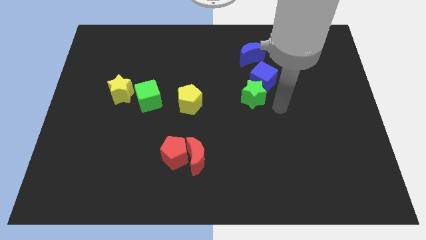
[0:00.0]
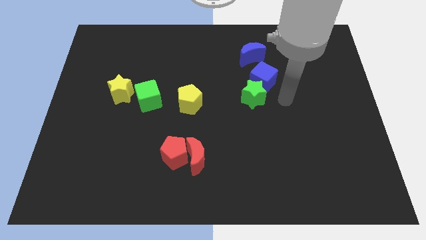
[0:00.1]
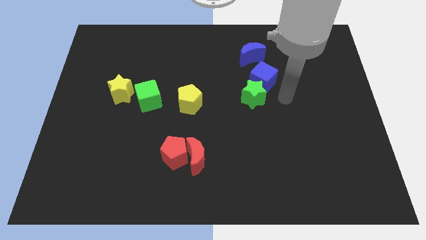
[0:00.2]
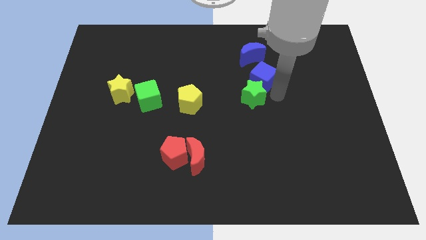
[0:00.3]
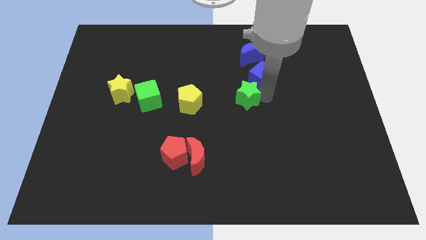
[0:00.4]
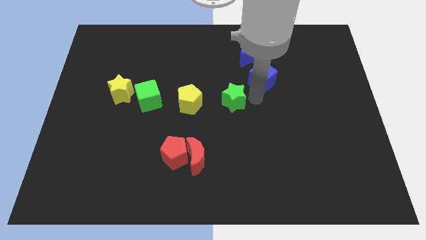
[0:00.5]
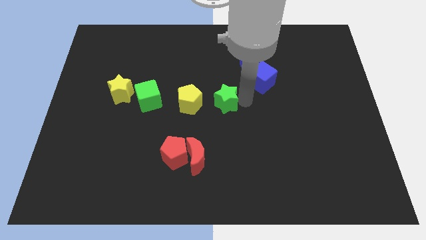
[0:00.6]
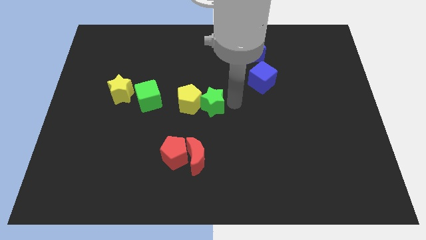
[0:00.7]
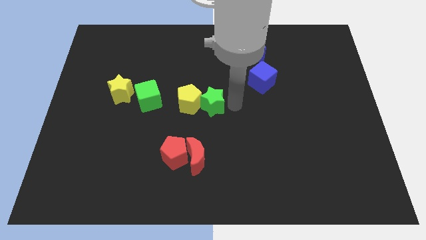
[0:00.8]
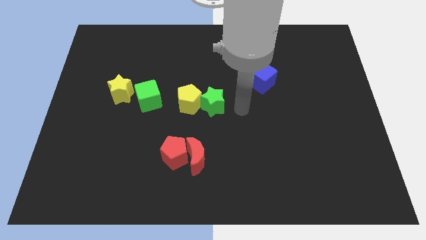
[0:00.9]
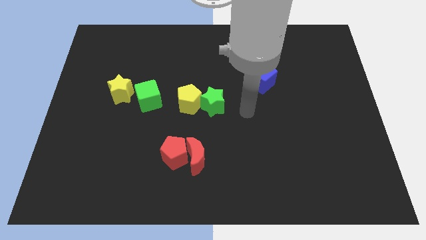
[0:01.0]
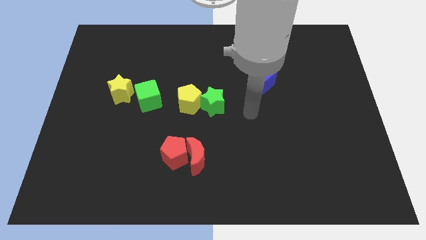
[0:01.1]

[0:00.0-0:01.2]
push the green star into the yellow pentagon

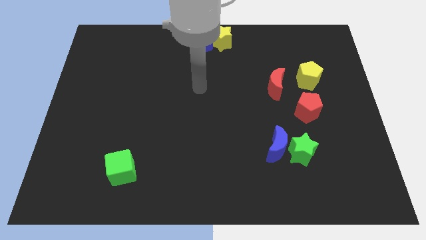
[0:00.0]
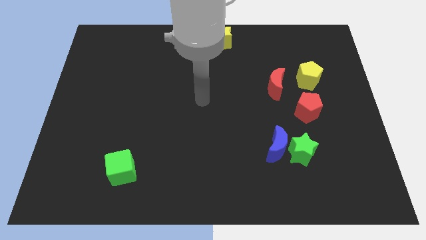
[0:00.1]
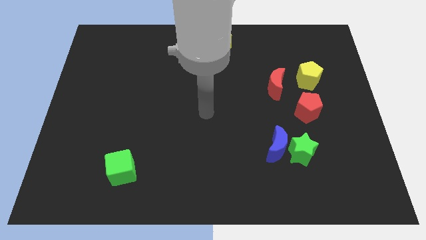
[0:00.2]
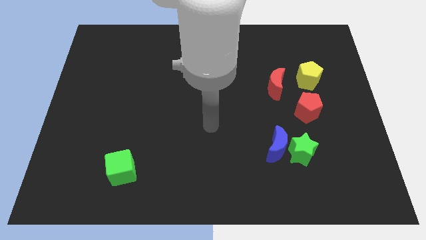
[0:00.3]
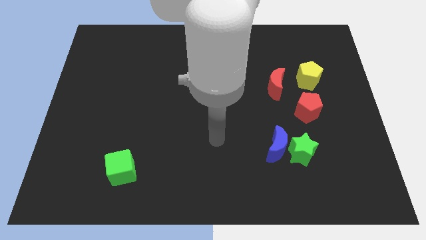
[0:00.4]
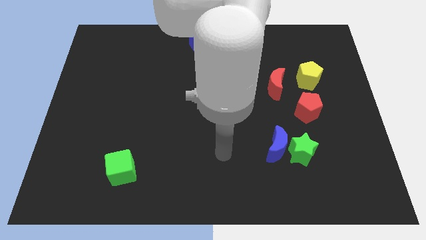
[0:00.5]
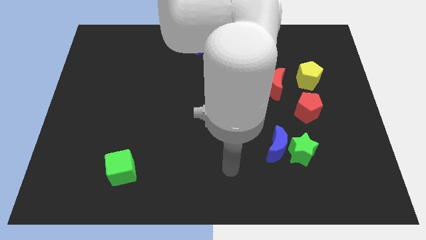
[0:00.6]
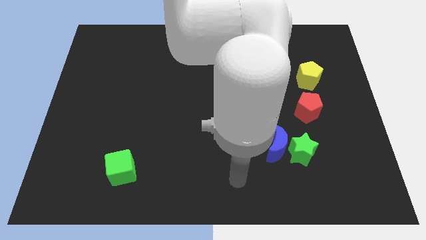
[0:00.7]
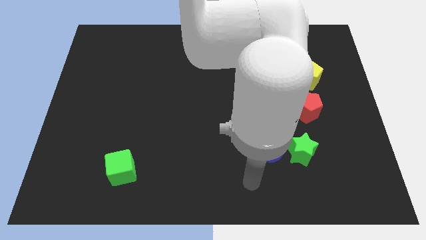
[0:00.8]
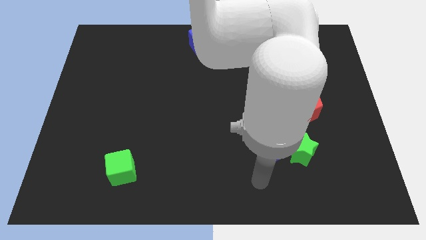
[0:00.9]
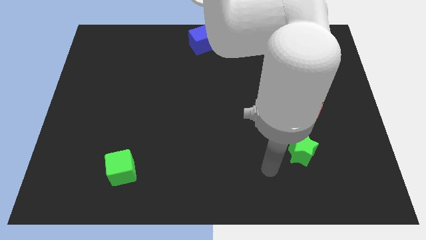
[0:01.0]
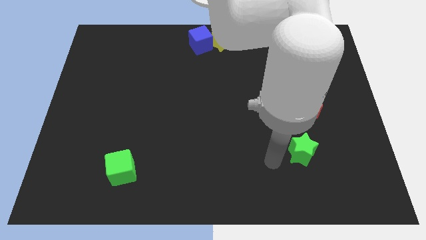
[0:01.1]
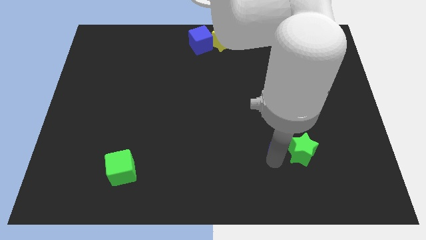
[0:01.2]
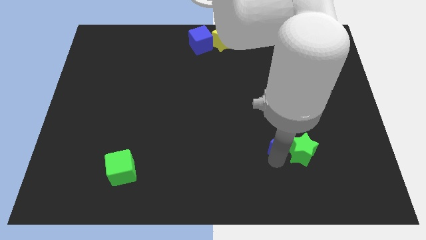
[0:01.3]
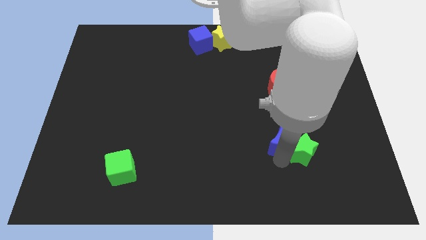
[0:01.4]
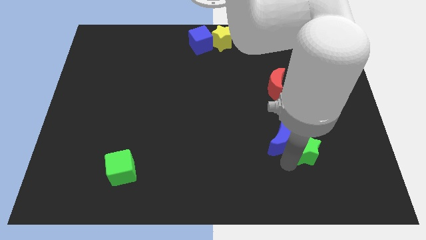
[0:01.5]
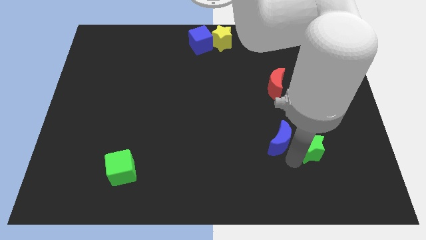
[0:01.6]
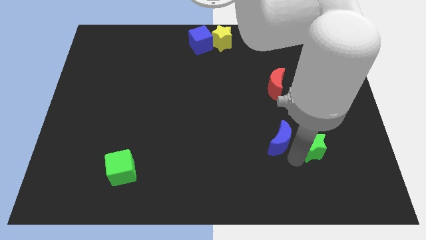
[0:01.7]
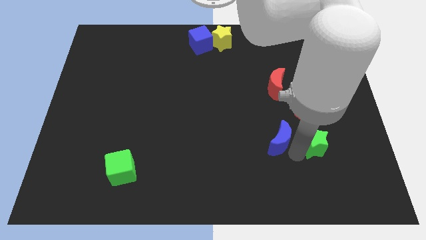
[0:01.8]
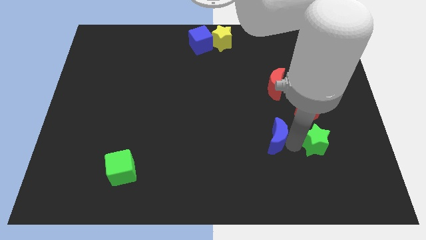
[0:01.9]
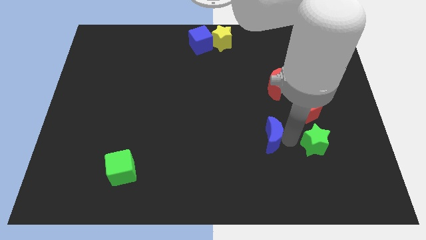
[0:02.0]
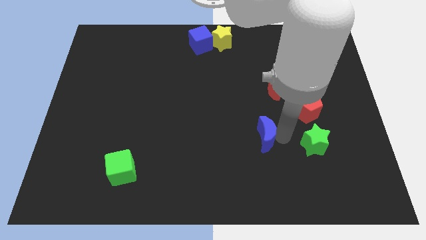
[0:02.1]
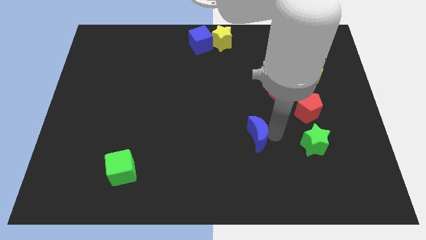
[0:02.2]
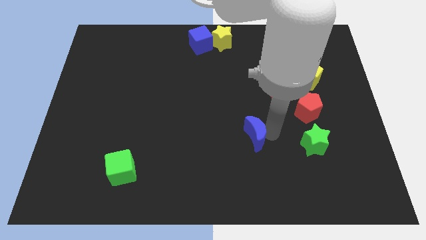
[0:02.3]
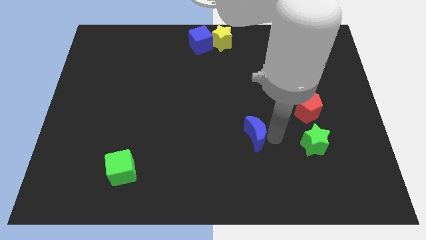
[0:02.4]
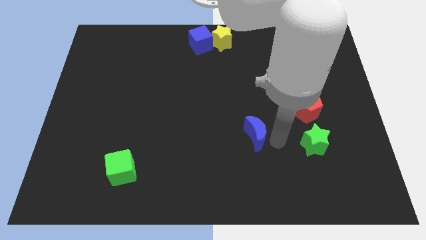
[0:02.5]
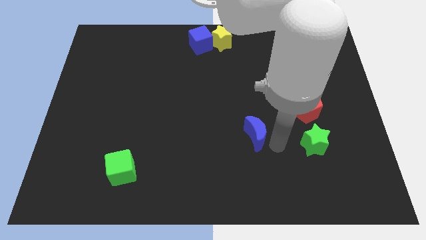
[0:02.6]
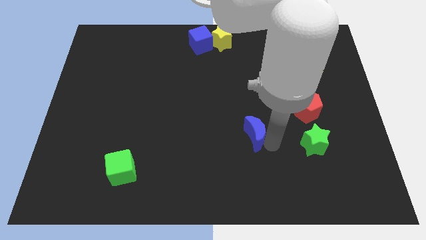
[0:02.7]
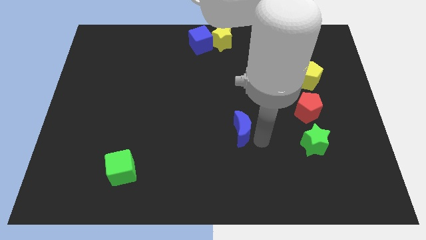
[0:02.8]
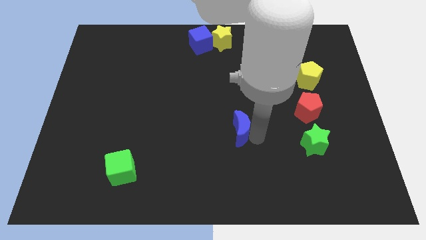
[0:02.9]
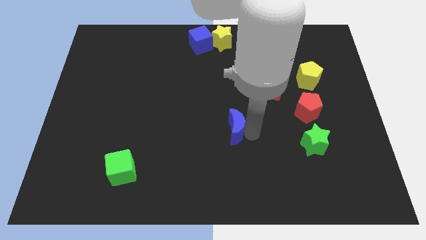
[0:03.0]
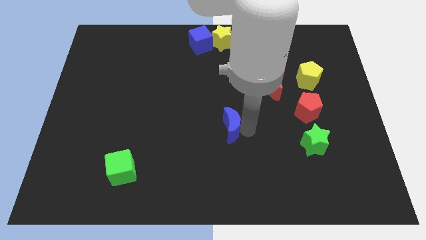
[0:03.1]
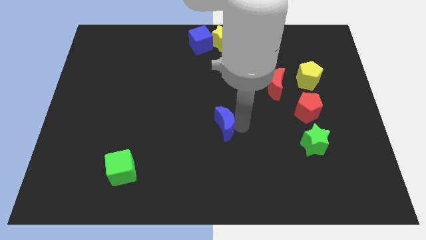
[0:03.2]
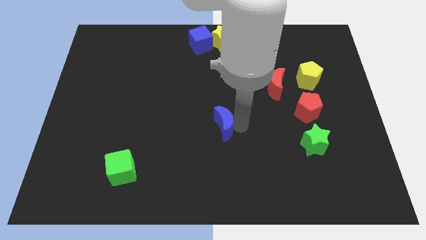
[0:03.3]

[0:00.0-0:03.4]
put the blue crescent vertically at the bottom side of the yellow star

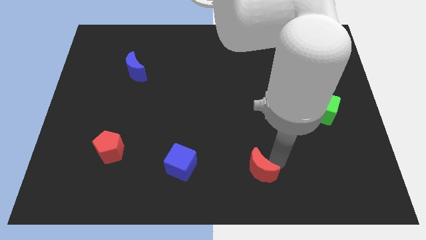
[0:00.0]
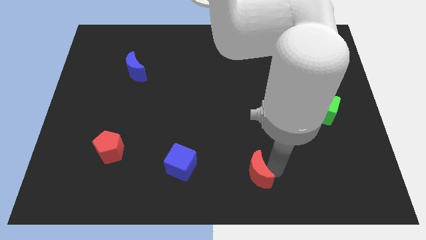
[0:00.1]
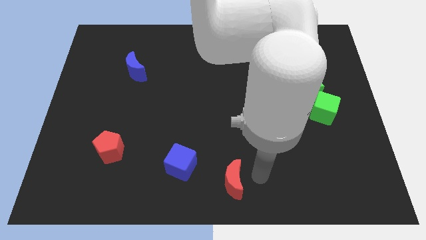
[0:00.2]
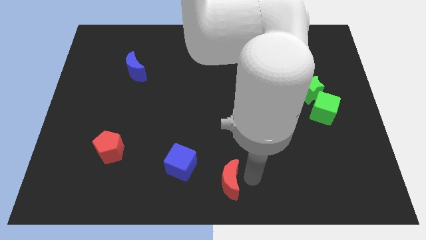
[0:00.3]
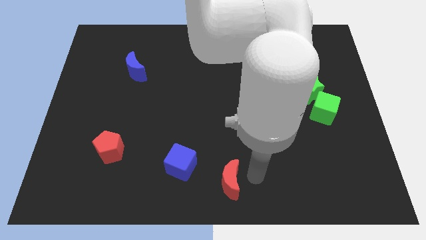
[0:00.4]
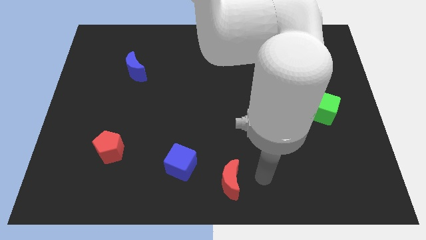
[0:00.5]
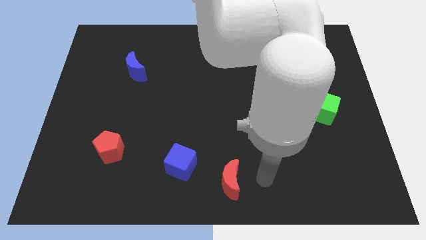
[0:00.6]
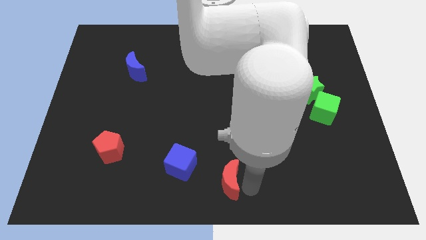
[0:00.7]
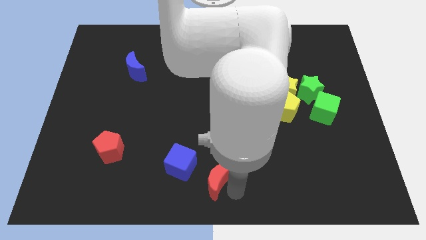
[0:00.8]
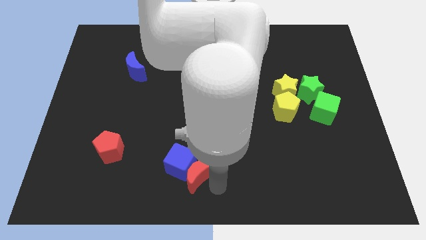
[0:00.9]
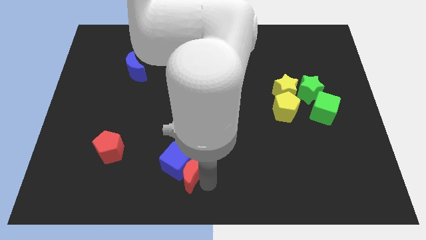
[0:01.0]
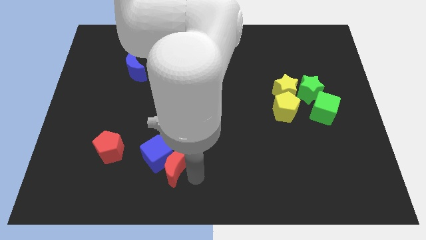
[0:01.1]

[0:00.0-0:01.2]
push the red crescent into the blue cube

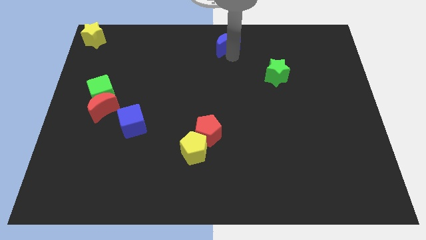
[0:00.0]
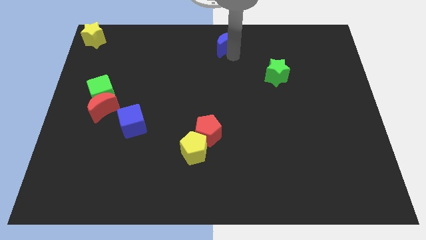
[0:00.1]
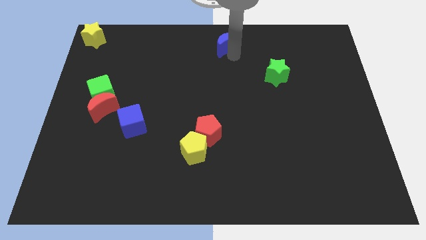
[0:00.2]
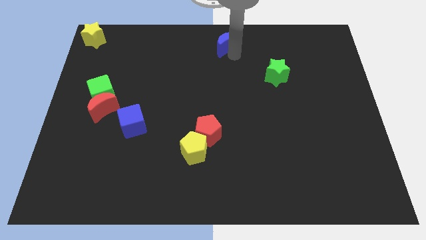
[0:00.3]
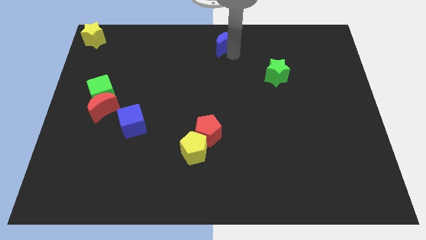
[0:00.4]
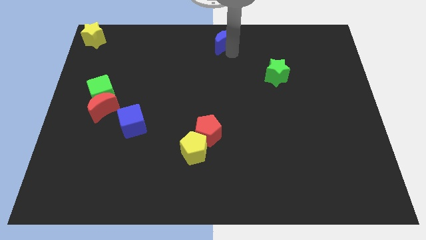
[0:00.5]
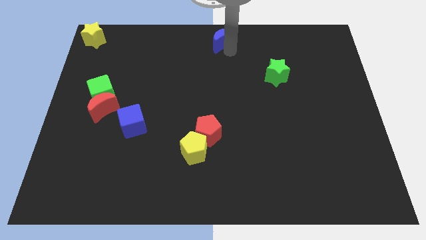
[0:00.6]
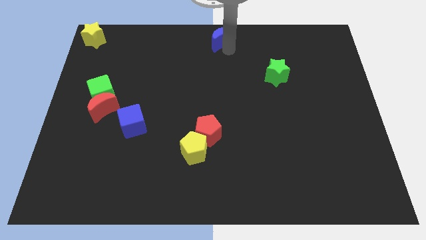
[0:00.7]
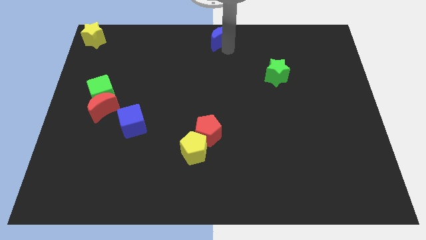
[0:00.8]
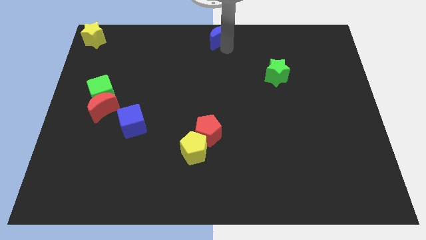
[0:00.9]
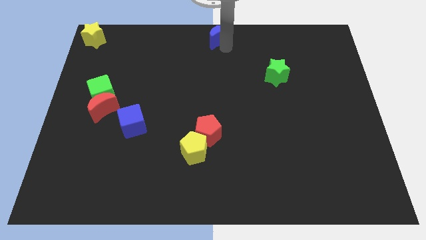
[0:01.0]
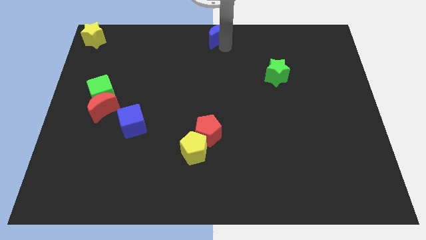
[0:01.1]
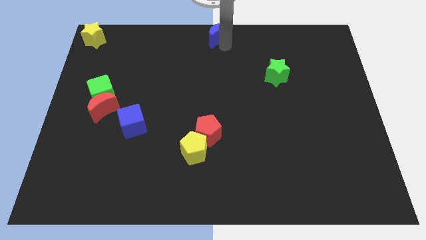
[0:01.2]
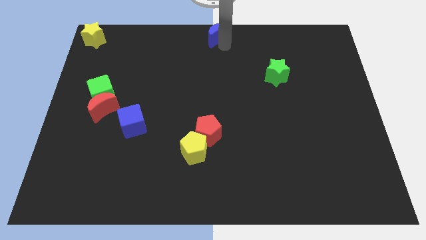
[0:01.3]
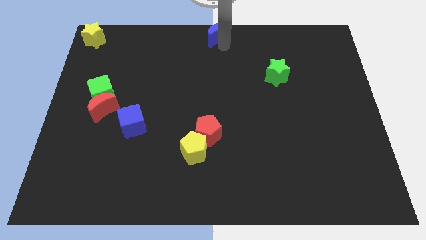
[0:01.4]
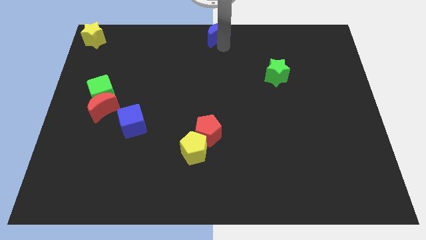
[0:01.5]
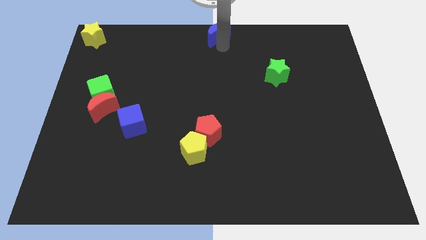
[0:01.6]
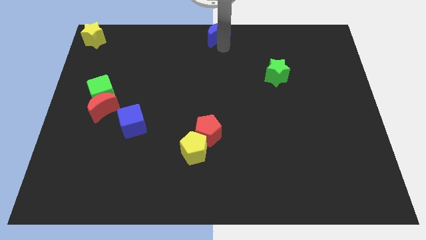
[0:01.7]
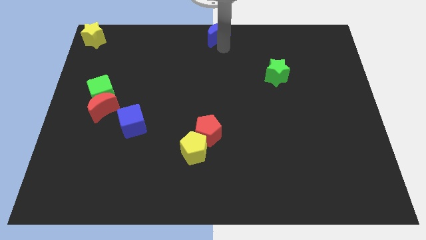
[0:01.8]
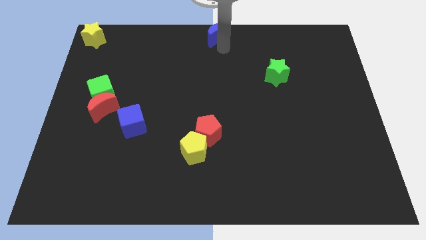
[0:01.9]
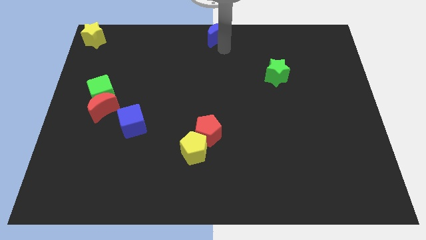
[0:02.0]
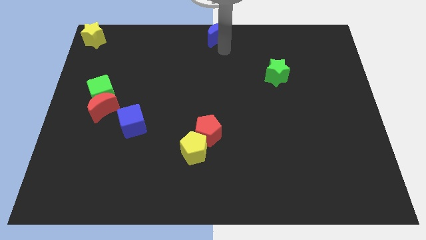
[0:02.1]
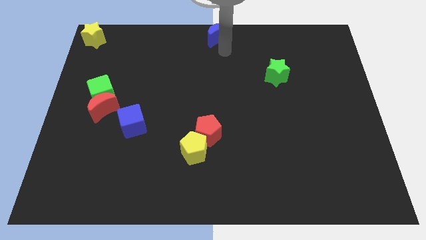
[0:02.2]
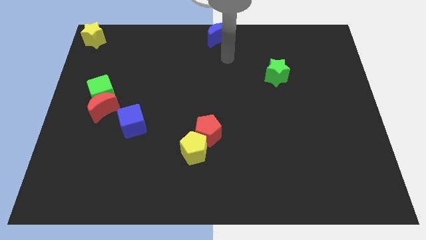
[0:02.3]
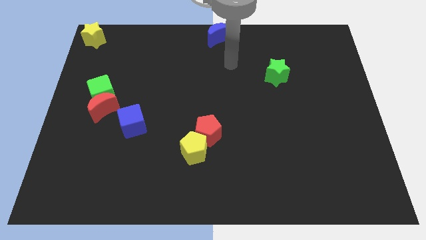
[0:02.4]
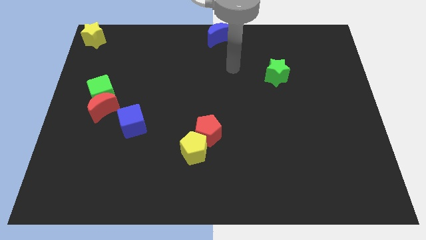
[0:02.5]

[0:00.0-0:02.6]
place the blue crescent at the top center of the board

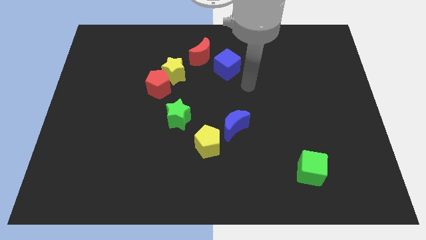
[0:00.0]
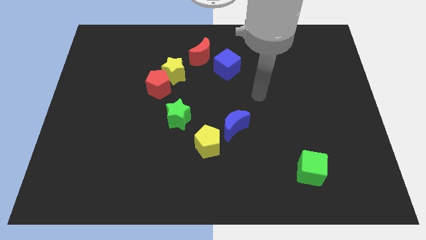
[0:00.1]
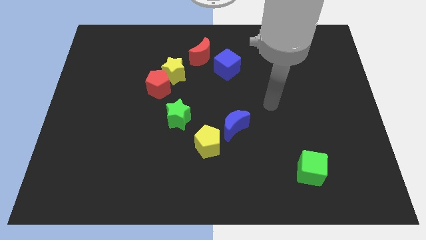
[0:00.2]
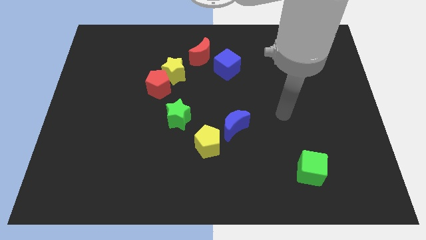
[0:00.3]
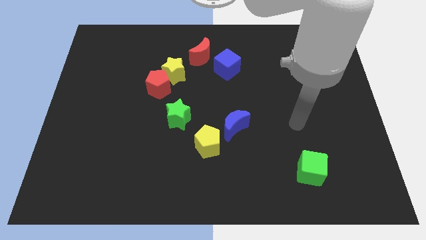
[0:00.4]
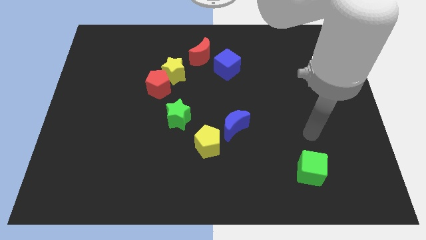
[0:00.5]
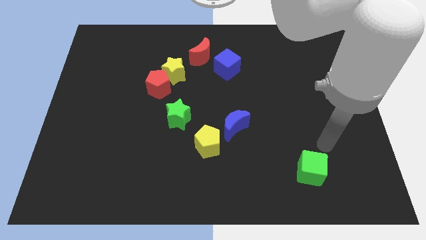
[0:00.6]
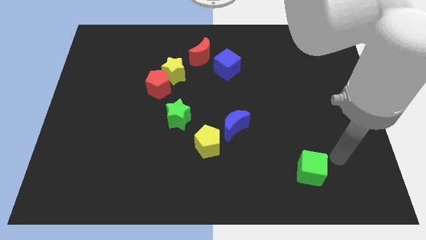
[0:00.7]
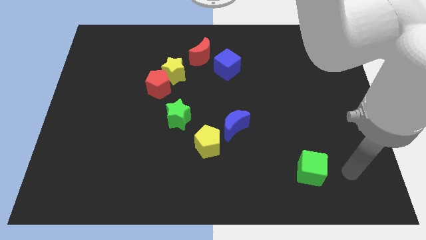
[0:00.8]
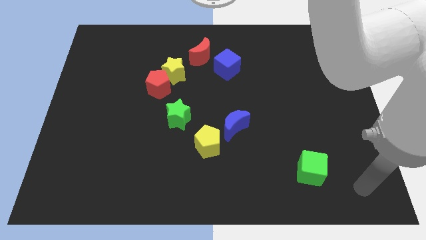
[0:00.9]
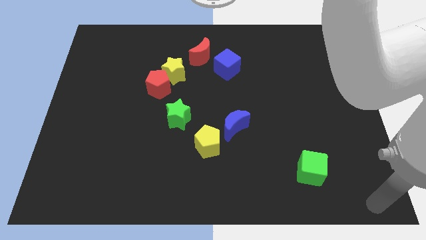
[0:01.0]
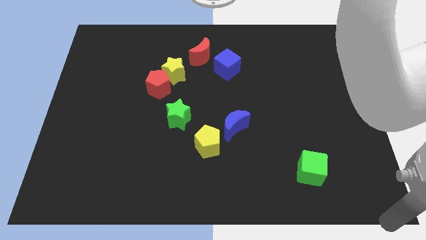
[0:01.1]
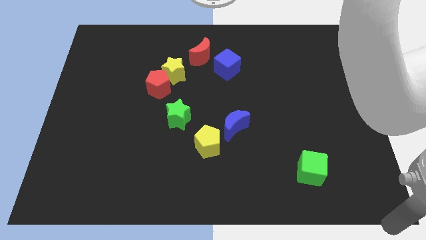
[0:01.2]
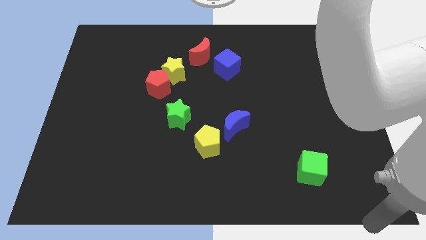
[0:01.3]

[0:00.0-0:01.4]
move the arm away from the blue cube
